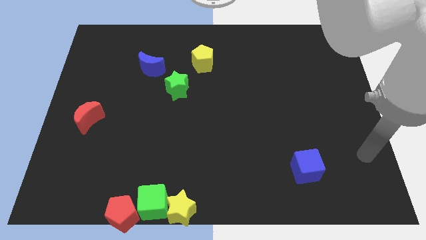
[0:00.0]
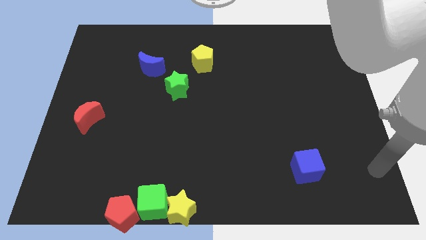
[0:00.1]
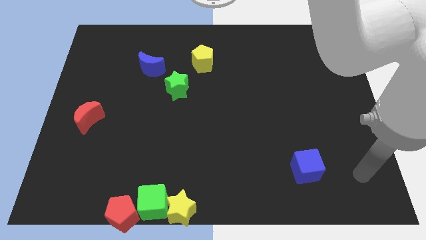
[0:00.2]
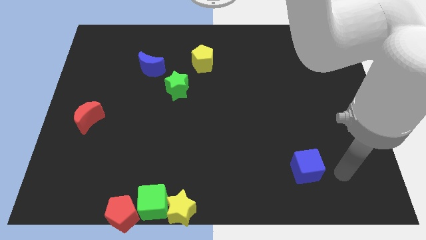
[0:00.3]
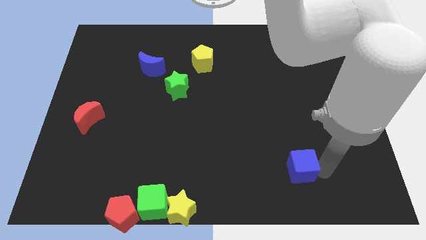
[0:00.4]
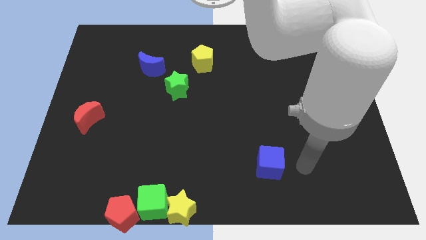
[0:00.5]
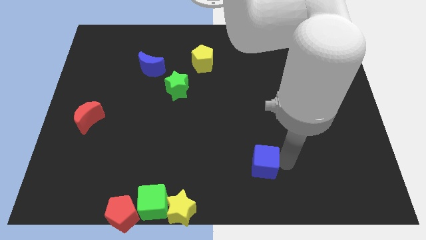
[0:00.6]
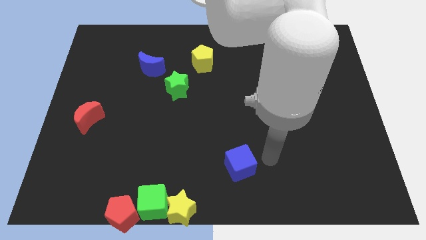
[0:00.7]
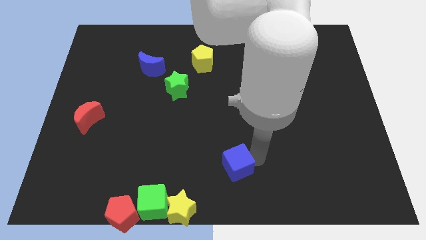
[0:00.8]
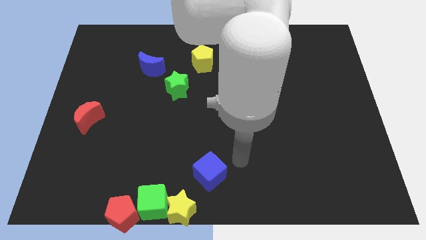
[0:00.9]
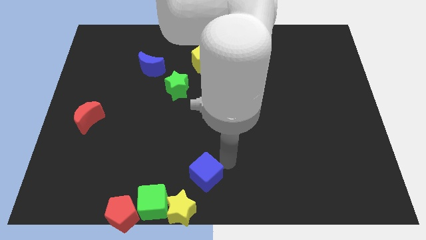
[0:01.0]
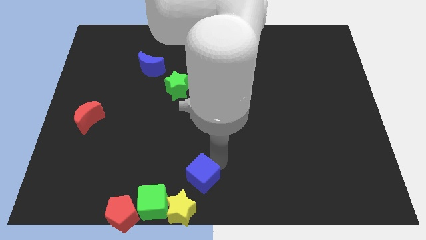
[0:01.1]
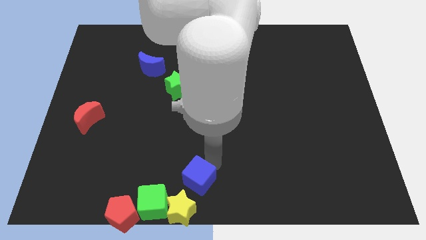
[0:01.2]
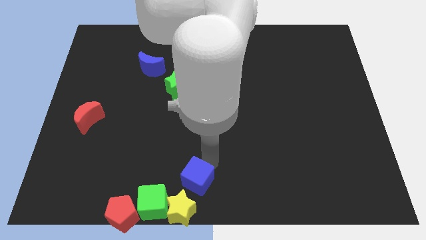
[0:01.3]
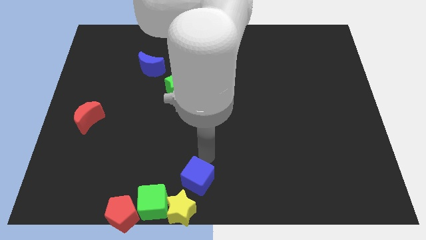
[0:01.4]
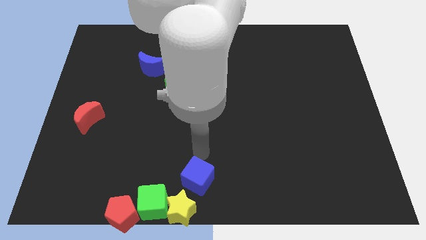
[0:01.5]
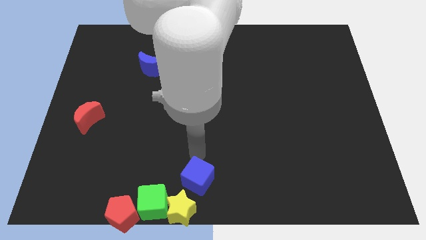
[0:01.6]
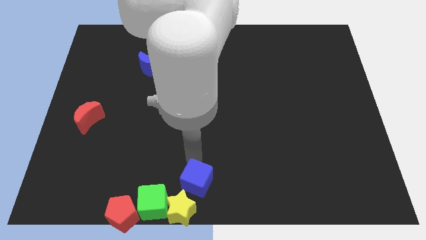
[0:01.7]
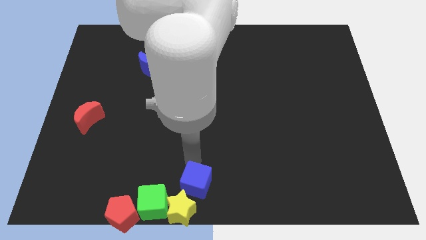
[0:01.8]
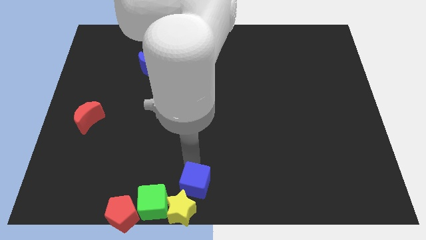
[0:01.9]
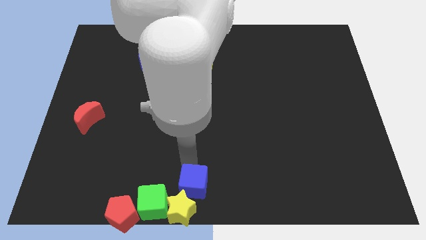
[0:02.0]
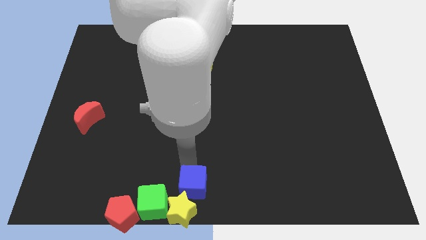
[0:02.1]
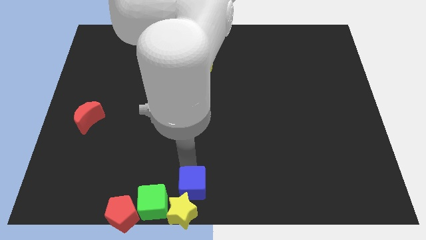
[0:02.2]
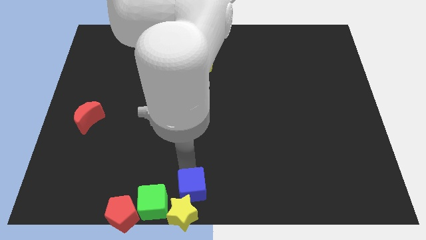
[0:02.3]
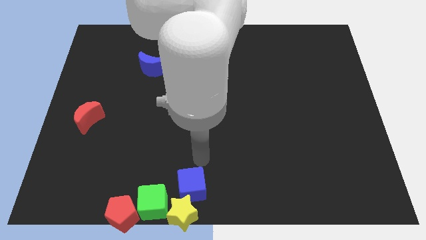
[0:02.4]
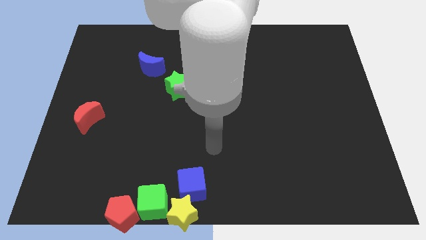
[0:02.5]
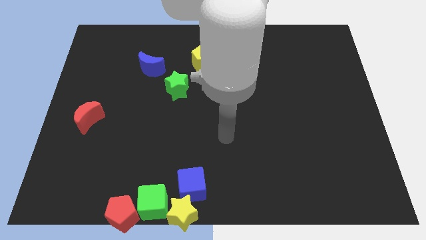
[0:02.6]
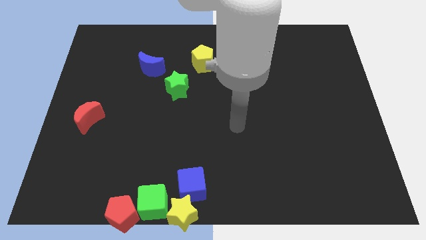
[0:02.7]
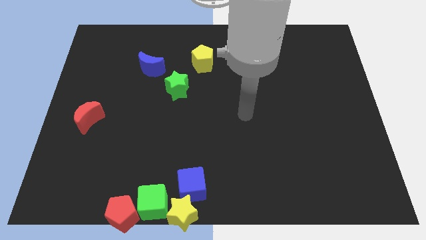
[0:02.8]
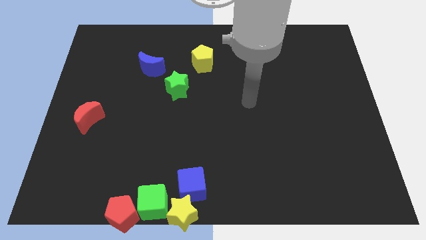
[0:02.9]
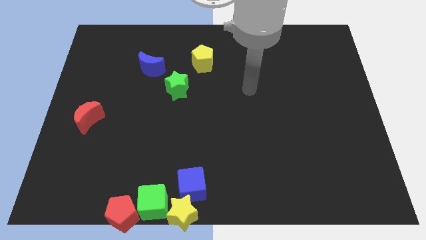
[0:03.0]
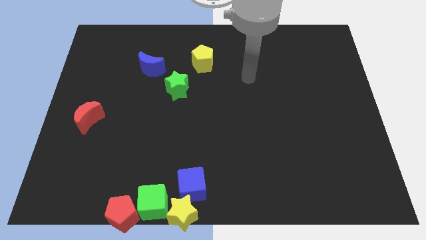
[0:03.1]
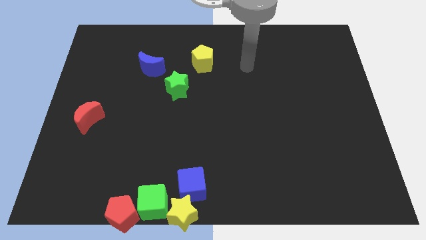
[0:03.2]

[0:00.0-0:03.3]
push the blue cube into the yellow star

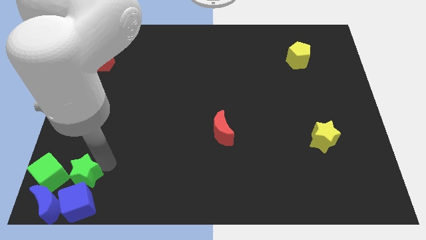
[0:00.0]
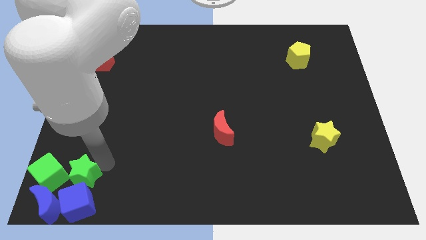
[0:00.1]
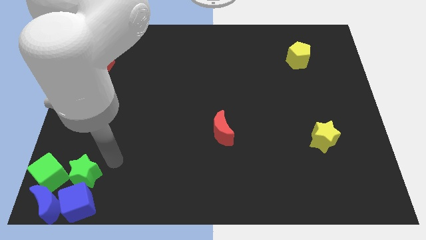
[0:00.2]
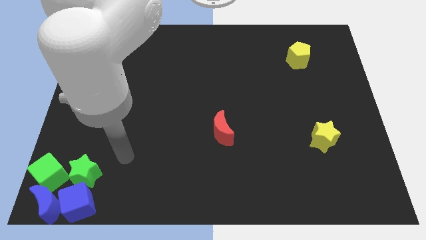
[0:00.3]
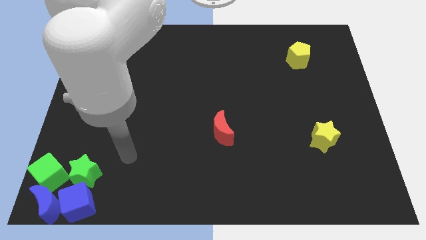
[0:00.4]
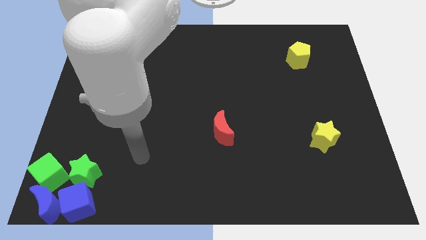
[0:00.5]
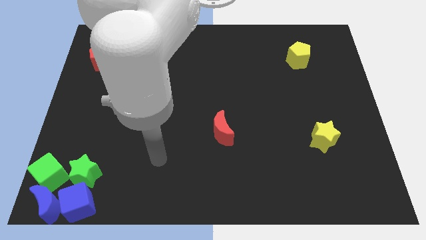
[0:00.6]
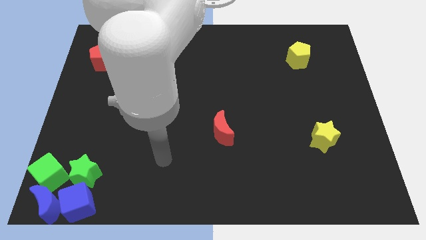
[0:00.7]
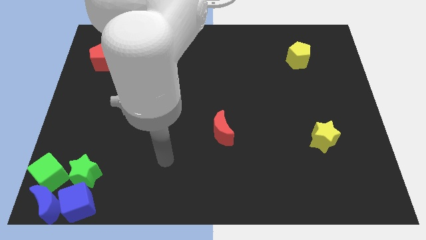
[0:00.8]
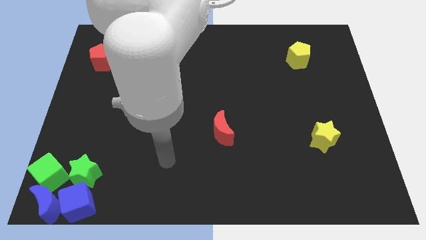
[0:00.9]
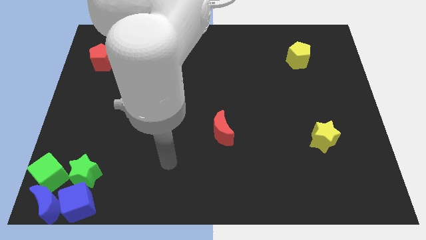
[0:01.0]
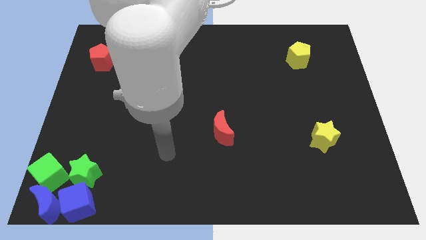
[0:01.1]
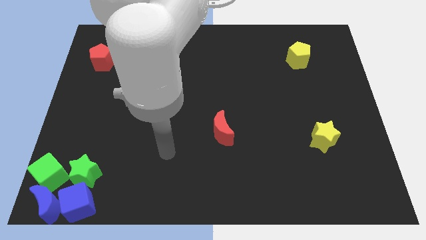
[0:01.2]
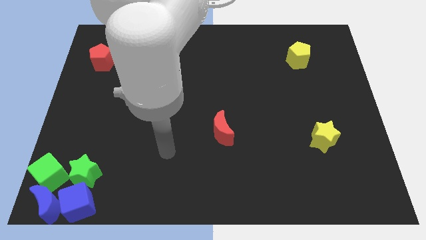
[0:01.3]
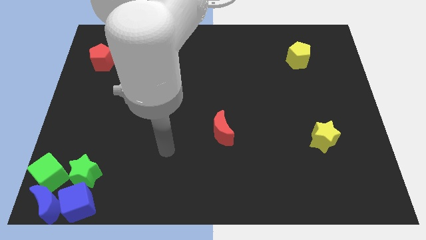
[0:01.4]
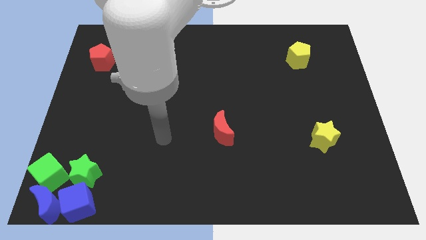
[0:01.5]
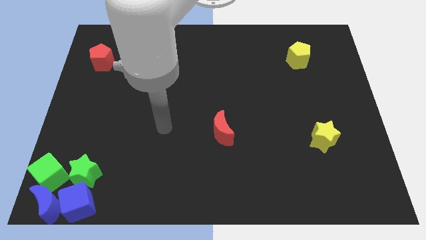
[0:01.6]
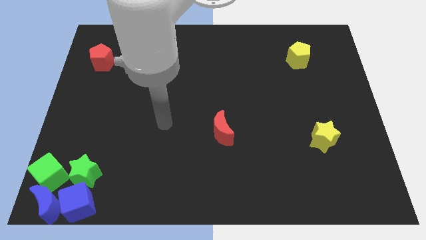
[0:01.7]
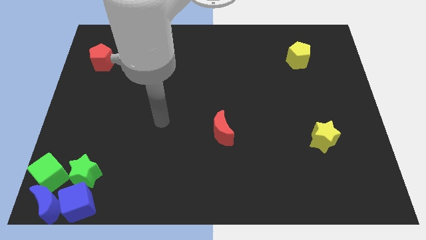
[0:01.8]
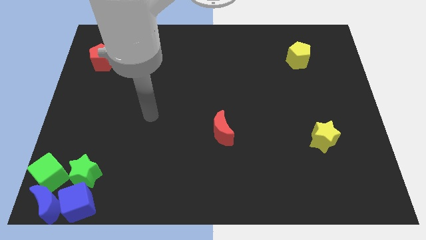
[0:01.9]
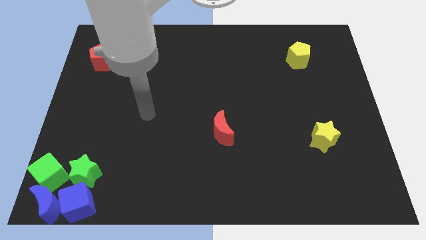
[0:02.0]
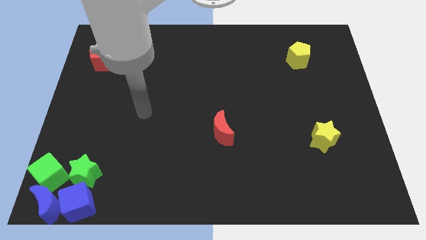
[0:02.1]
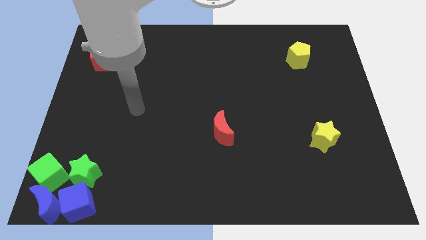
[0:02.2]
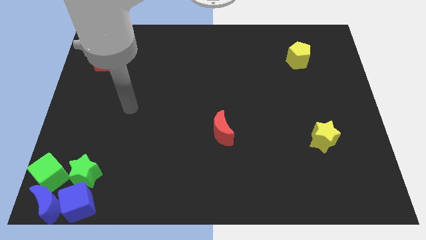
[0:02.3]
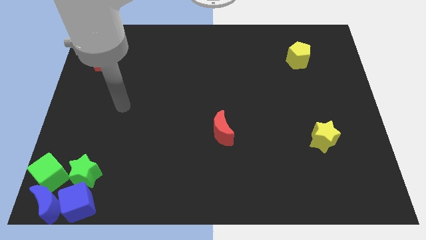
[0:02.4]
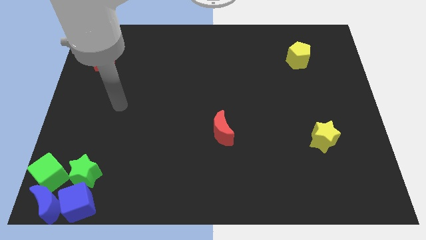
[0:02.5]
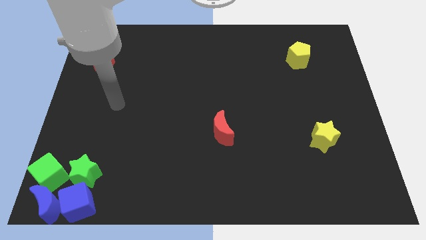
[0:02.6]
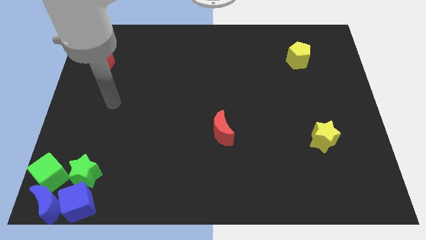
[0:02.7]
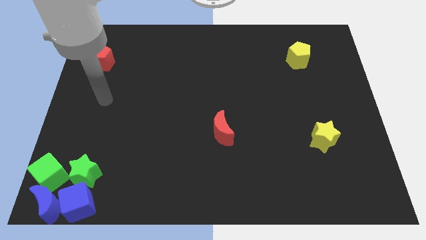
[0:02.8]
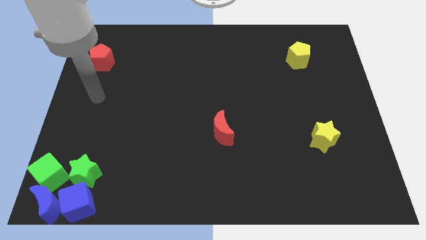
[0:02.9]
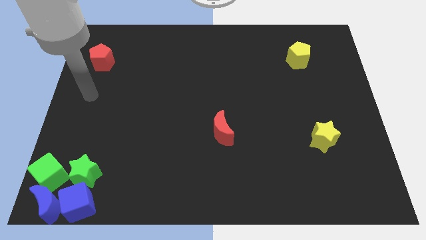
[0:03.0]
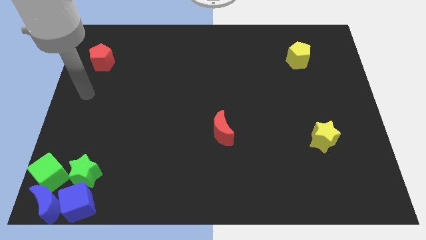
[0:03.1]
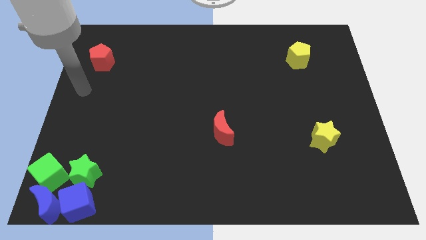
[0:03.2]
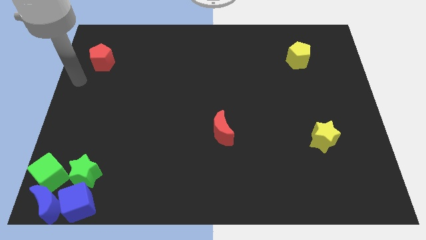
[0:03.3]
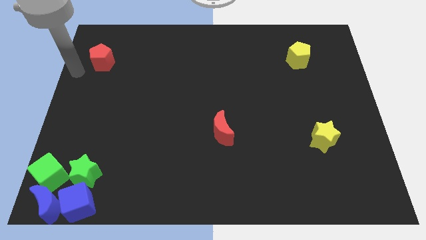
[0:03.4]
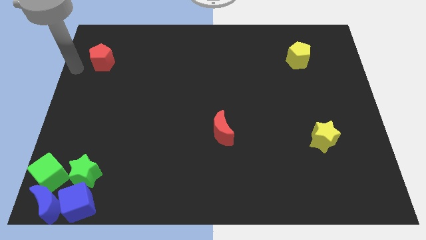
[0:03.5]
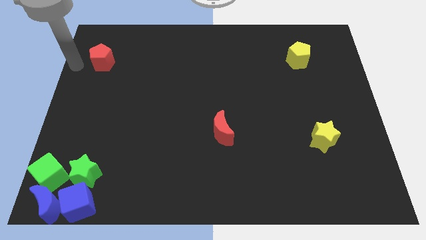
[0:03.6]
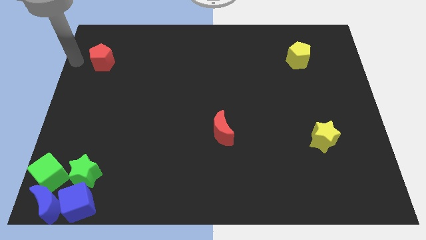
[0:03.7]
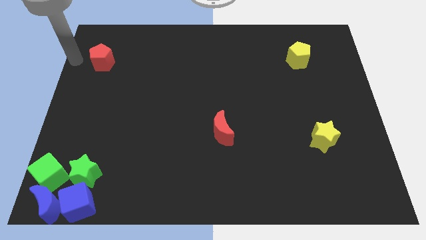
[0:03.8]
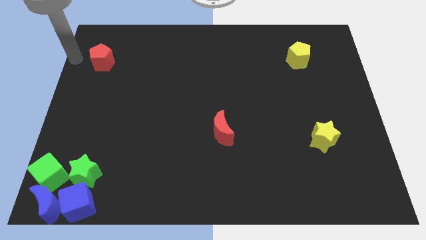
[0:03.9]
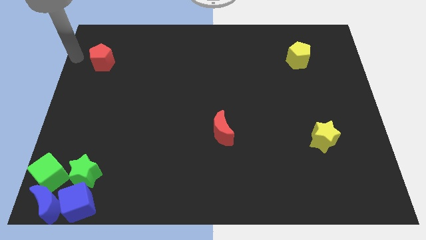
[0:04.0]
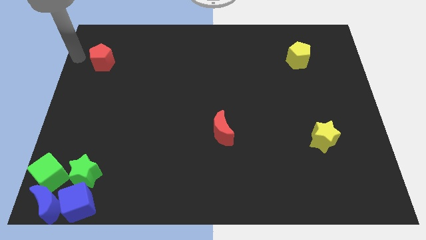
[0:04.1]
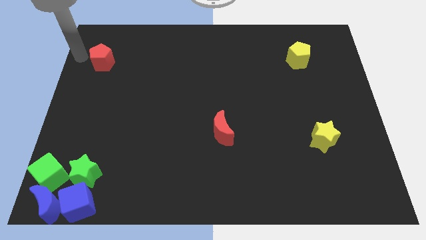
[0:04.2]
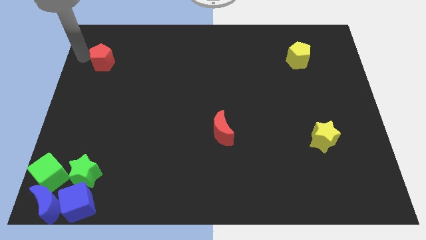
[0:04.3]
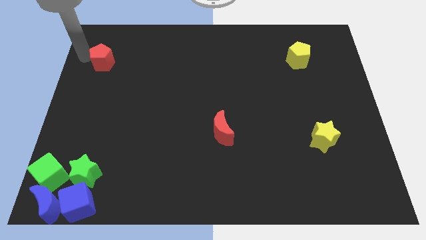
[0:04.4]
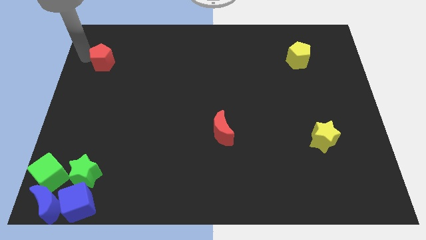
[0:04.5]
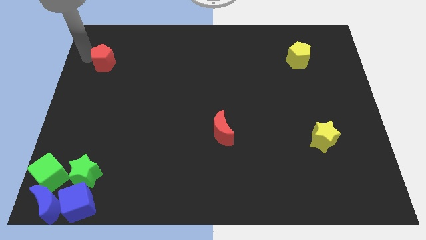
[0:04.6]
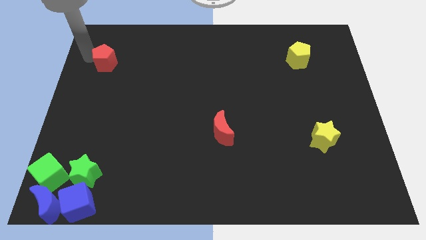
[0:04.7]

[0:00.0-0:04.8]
move your arm towards the red pentagon

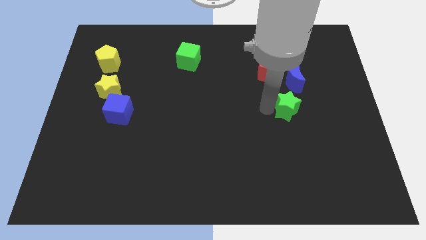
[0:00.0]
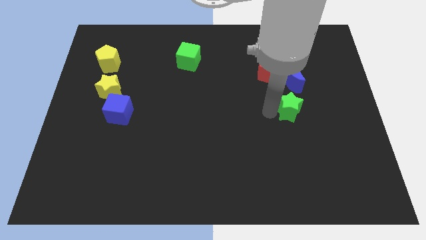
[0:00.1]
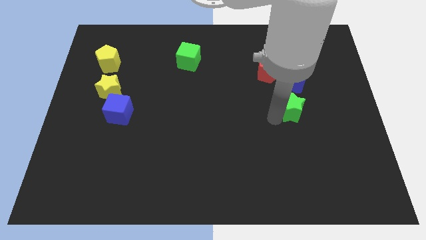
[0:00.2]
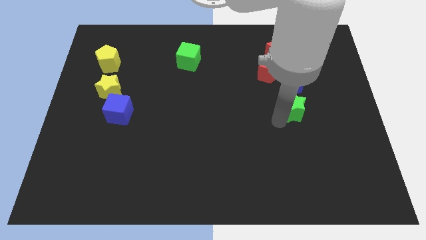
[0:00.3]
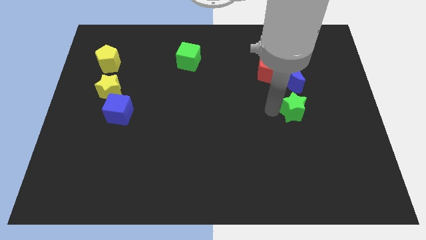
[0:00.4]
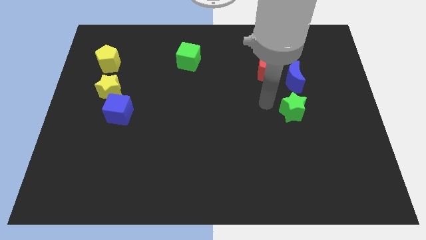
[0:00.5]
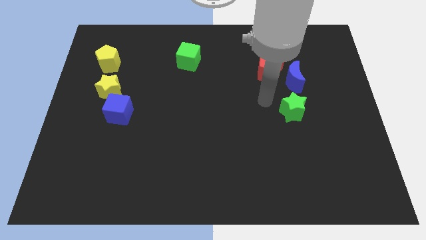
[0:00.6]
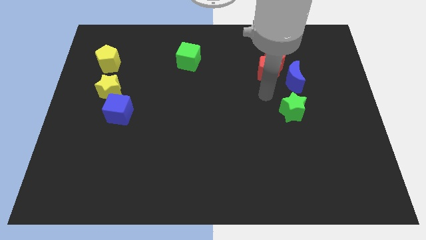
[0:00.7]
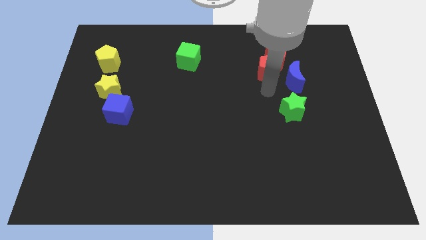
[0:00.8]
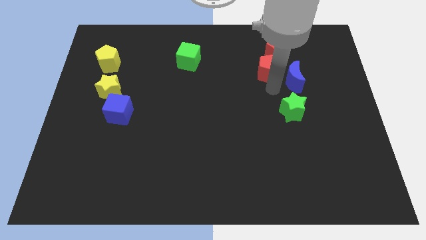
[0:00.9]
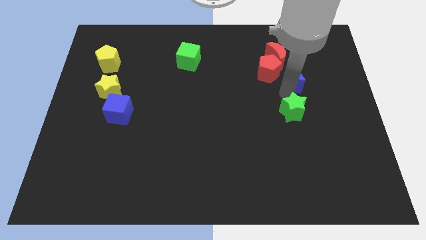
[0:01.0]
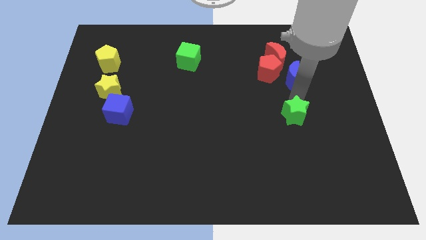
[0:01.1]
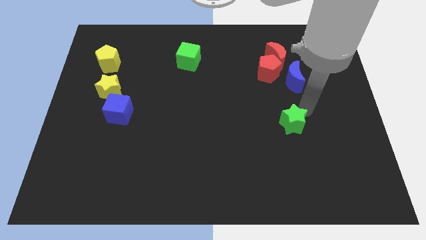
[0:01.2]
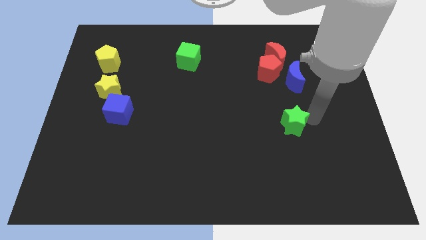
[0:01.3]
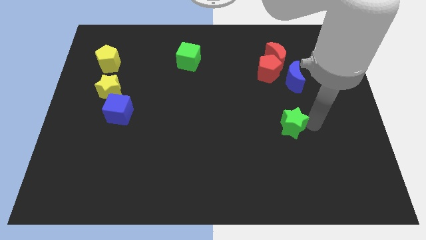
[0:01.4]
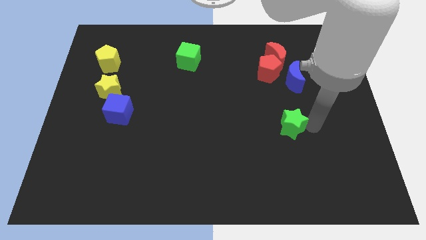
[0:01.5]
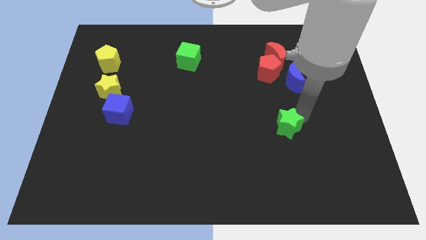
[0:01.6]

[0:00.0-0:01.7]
separate green star from the blue moon
